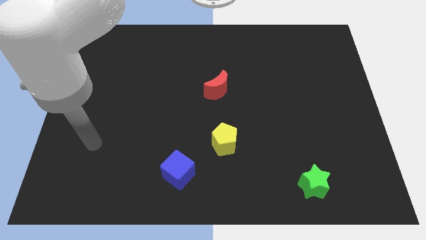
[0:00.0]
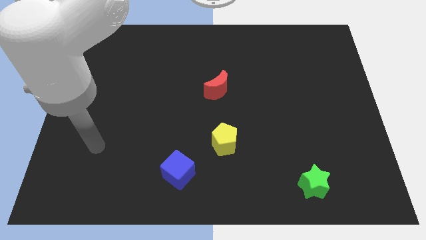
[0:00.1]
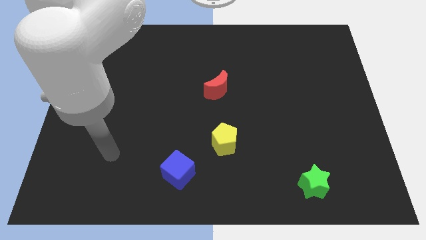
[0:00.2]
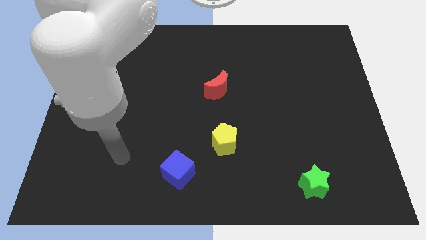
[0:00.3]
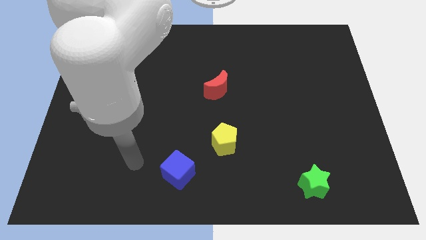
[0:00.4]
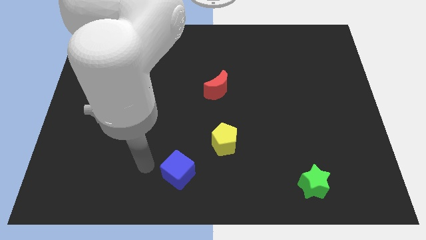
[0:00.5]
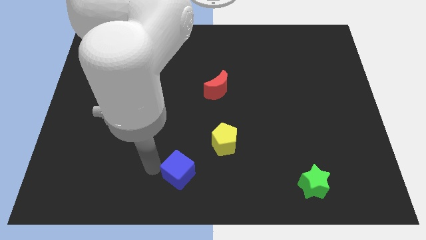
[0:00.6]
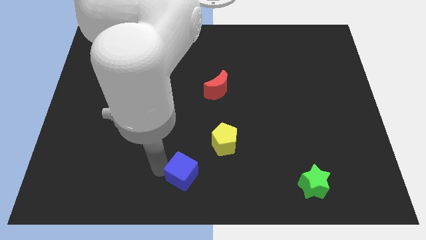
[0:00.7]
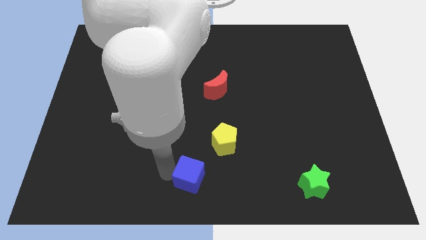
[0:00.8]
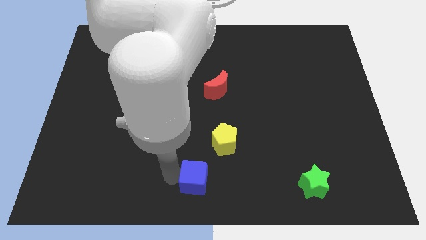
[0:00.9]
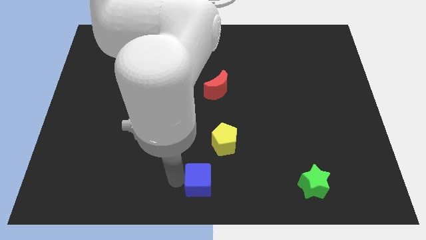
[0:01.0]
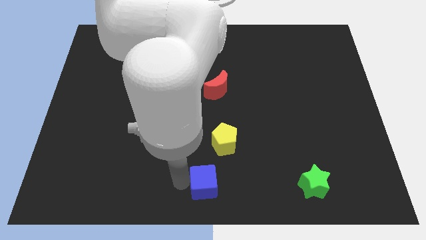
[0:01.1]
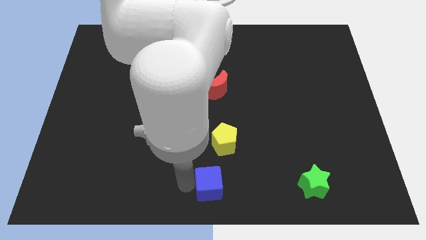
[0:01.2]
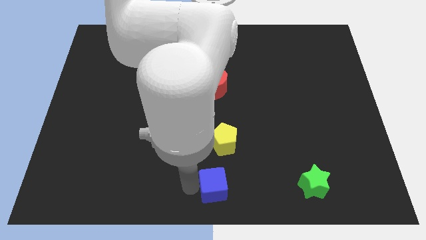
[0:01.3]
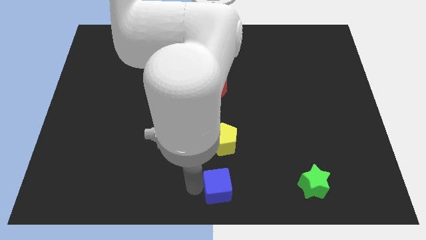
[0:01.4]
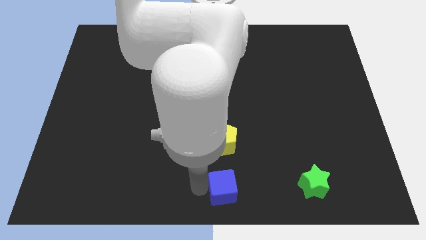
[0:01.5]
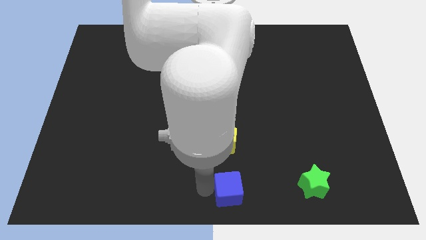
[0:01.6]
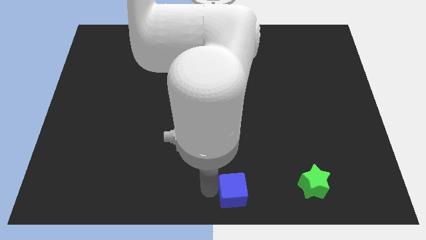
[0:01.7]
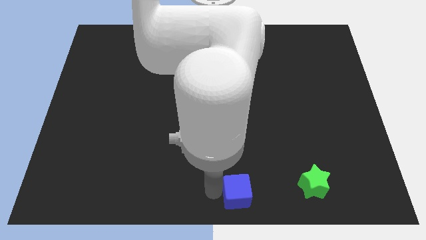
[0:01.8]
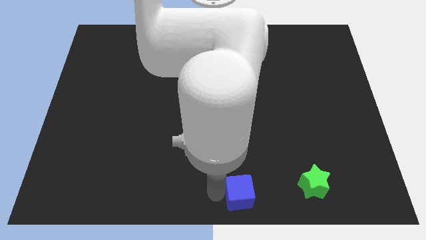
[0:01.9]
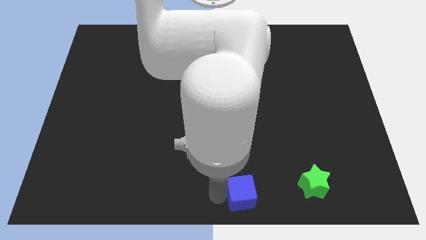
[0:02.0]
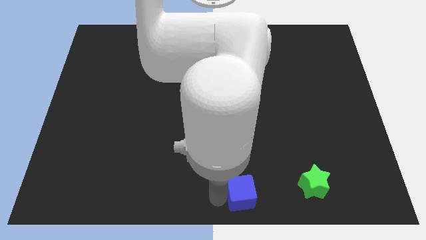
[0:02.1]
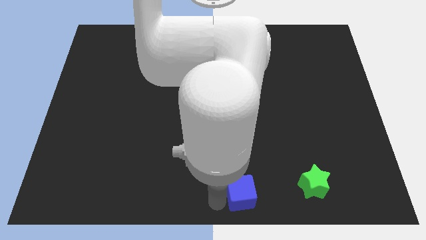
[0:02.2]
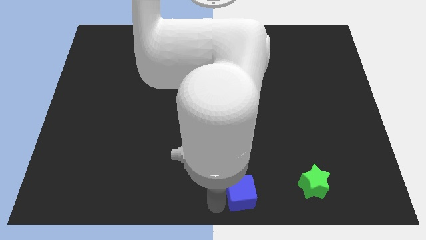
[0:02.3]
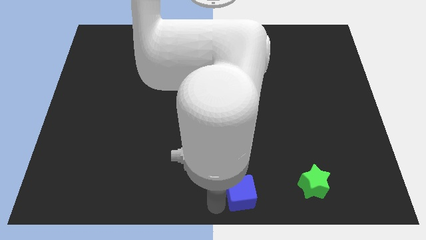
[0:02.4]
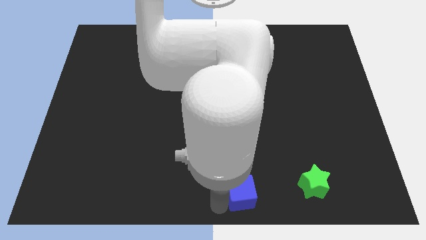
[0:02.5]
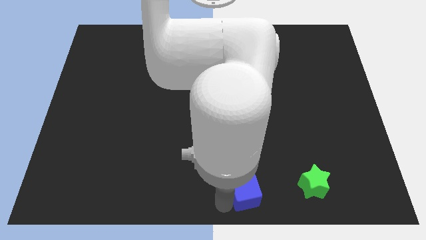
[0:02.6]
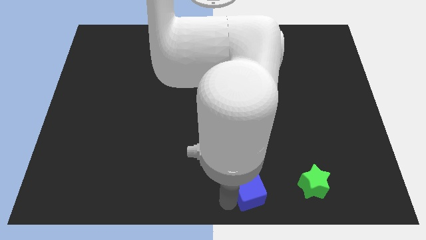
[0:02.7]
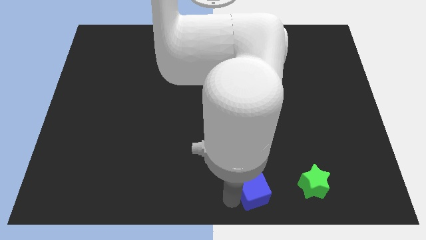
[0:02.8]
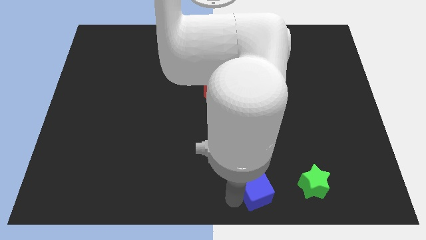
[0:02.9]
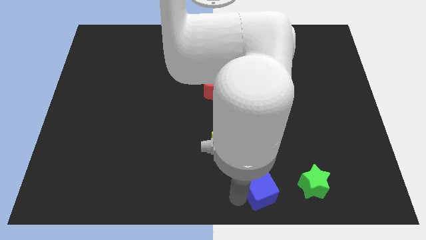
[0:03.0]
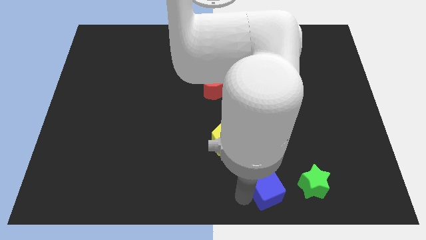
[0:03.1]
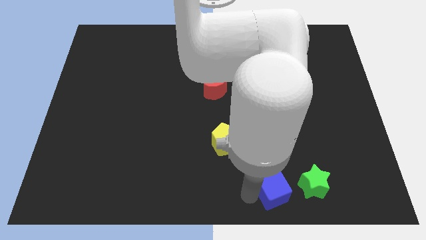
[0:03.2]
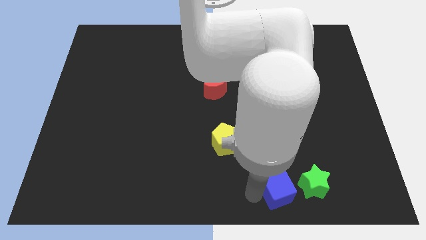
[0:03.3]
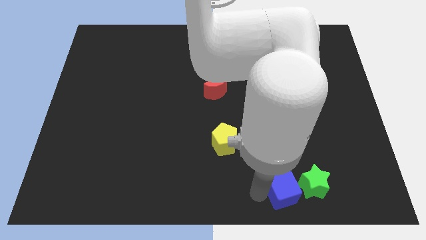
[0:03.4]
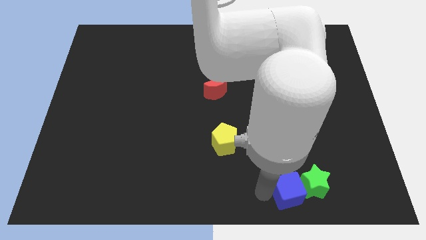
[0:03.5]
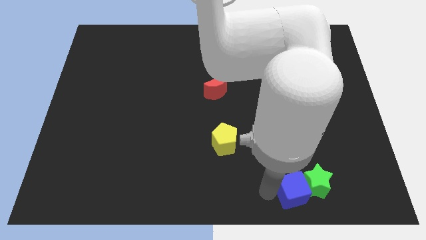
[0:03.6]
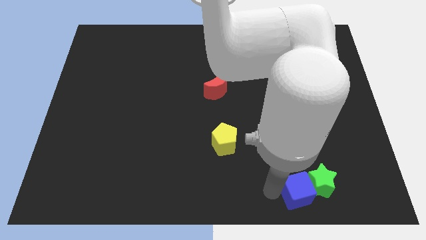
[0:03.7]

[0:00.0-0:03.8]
slide the blue block to the green star

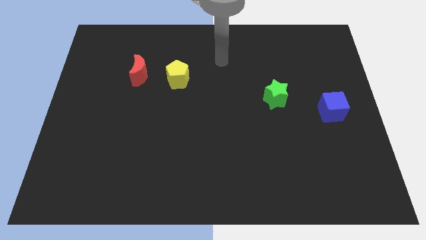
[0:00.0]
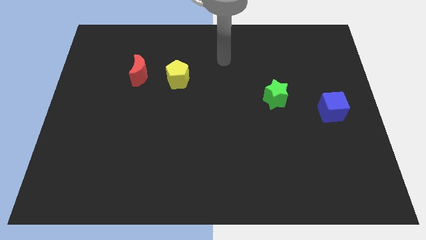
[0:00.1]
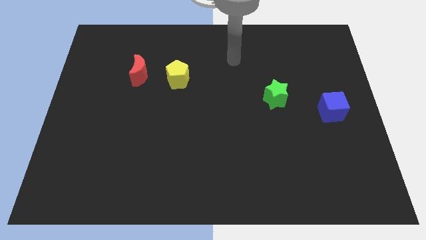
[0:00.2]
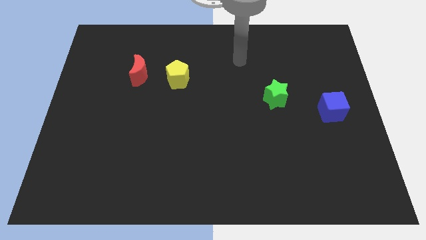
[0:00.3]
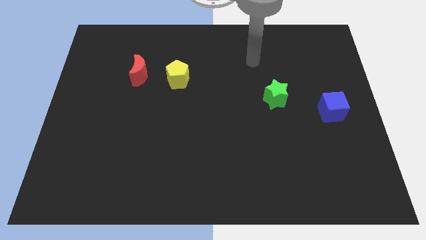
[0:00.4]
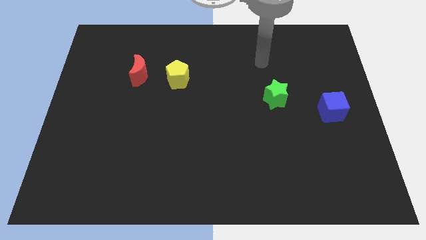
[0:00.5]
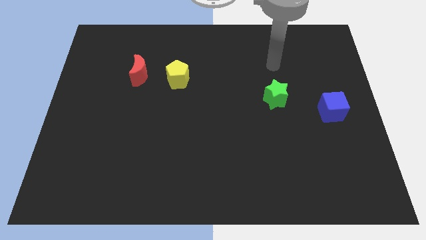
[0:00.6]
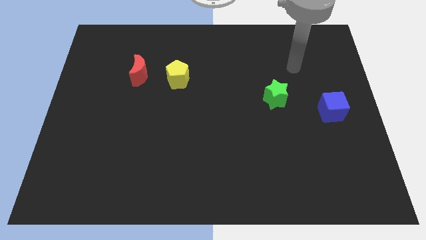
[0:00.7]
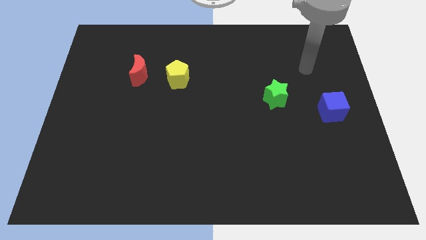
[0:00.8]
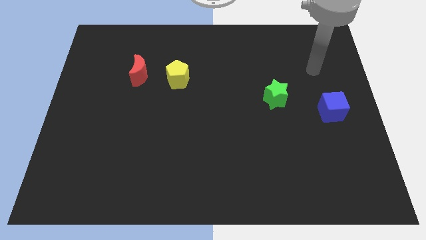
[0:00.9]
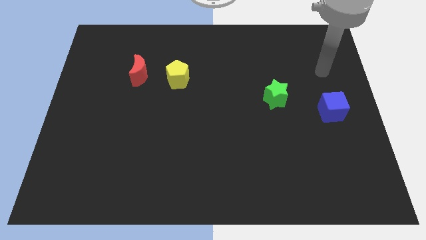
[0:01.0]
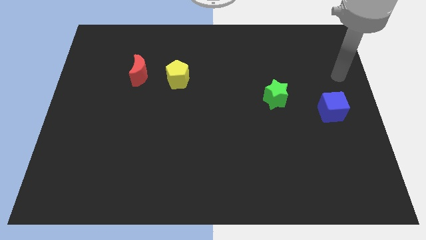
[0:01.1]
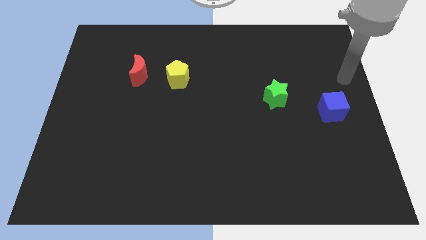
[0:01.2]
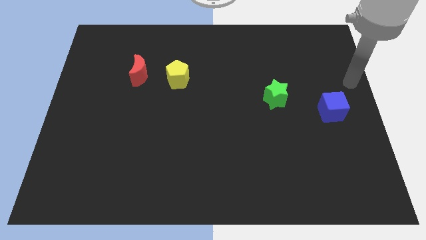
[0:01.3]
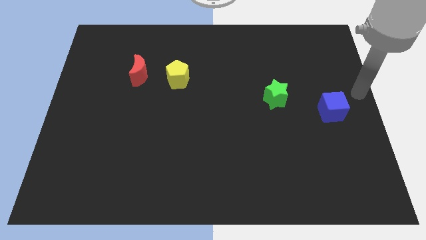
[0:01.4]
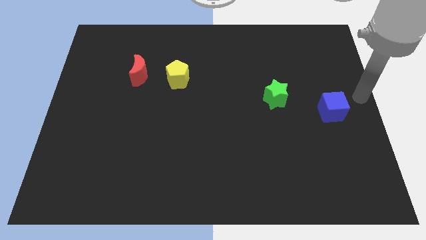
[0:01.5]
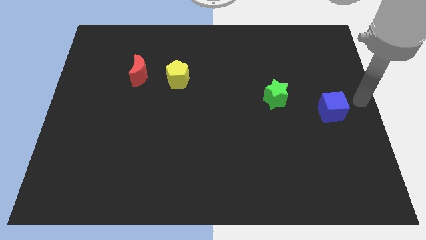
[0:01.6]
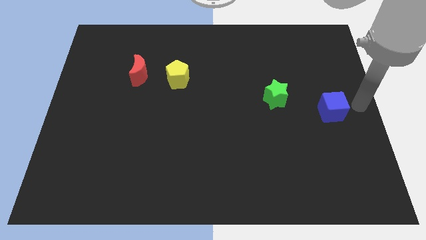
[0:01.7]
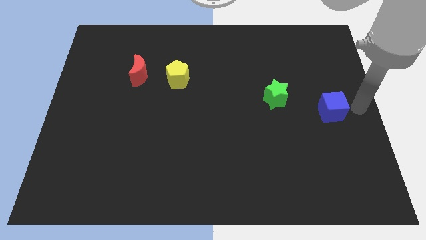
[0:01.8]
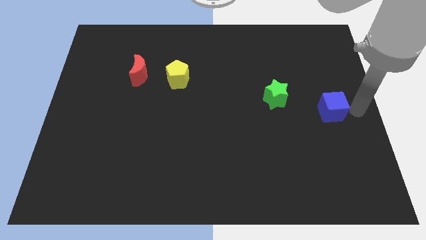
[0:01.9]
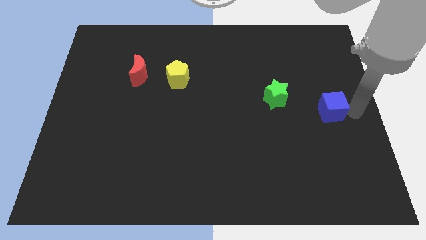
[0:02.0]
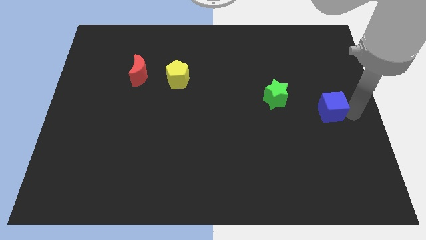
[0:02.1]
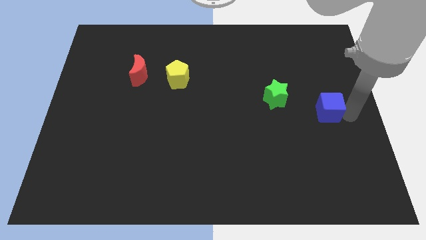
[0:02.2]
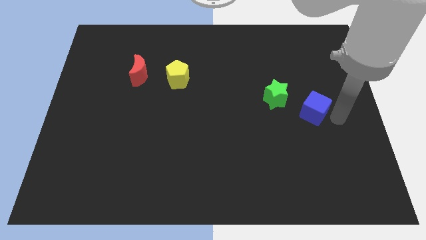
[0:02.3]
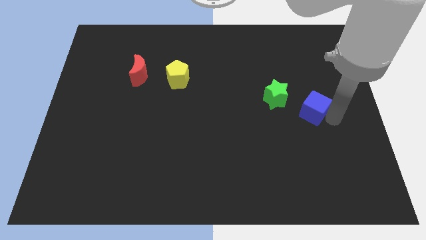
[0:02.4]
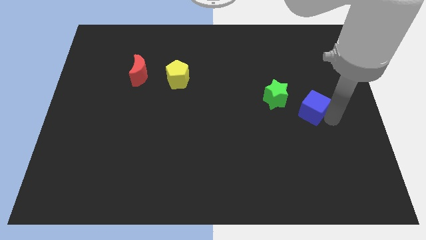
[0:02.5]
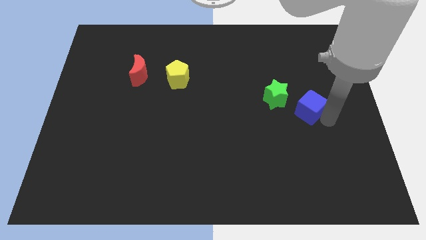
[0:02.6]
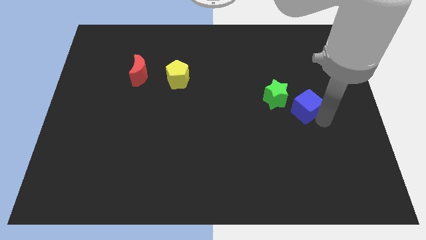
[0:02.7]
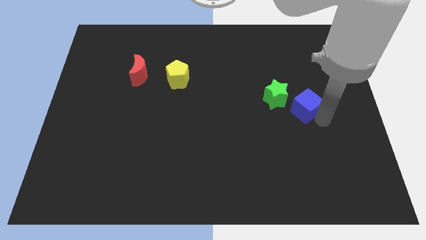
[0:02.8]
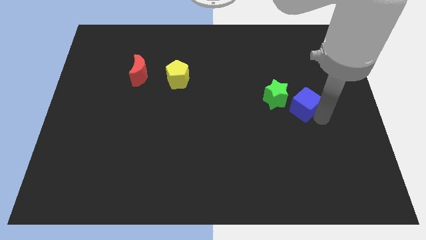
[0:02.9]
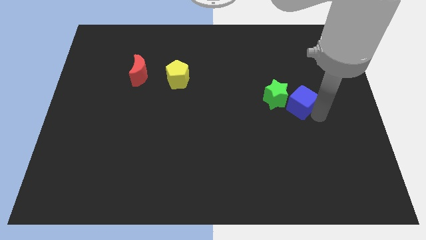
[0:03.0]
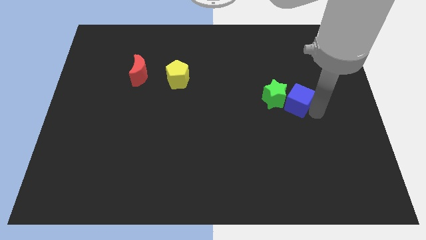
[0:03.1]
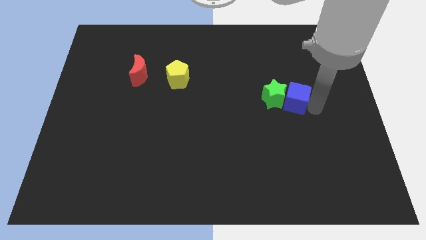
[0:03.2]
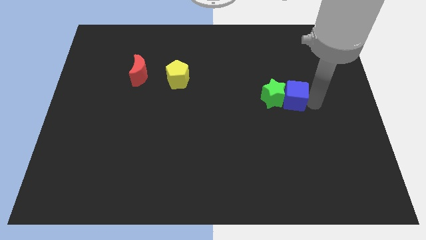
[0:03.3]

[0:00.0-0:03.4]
move the blue block next to the green star

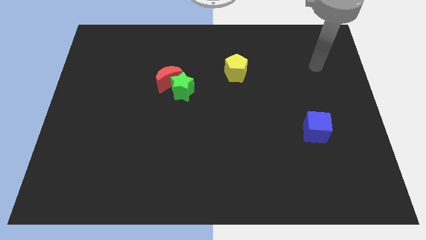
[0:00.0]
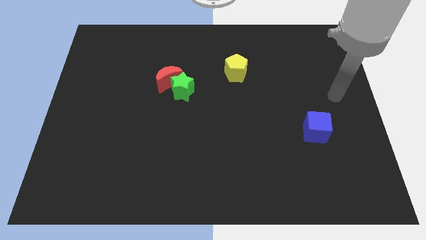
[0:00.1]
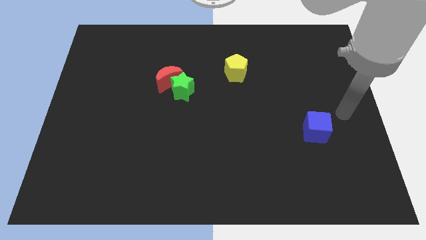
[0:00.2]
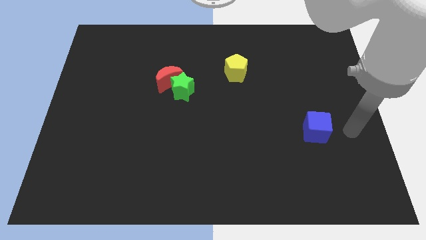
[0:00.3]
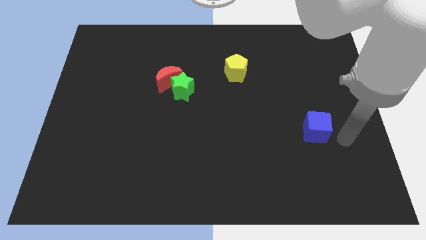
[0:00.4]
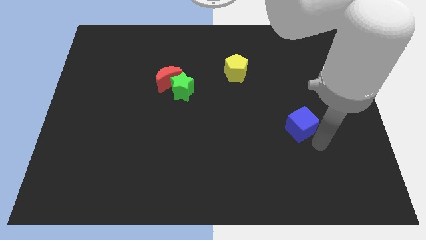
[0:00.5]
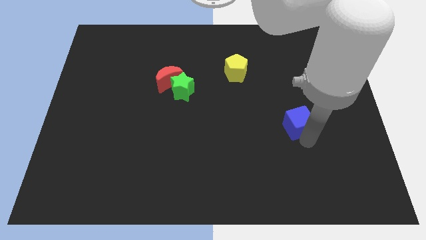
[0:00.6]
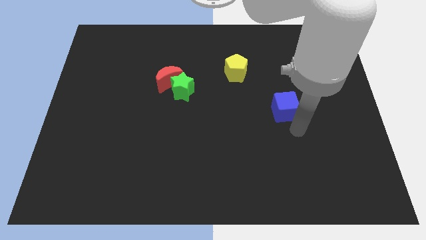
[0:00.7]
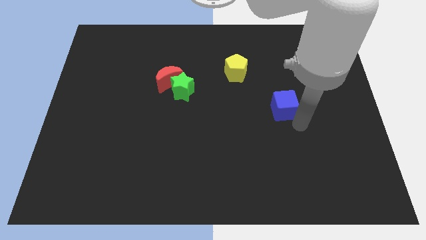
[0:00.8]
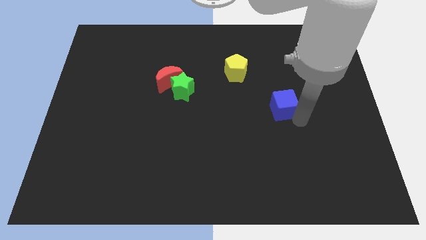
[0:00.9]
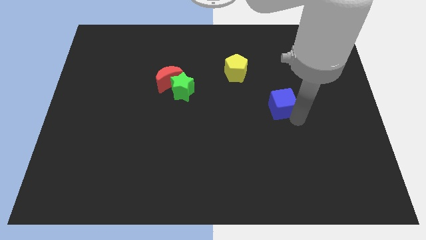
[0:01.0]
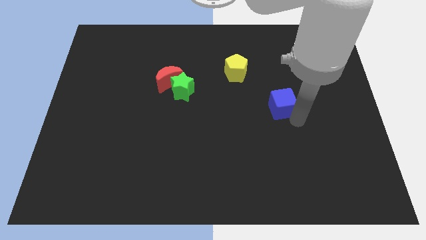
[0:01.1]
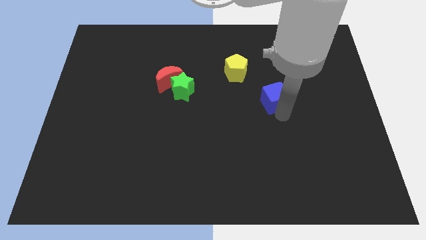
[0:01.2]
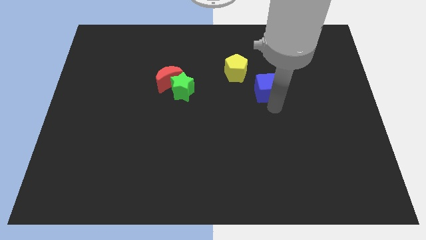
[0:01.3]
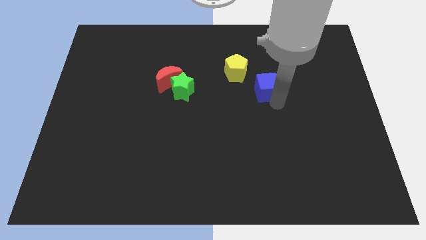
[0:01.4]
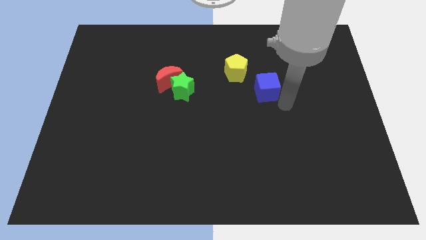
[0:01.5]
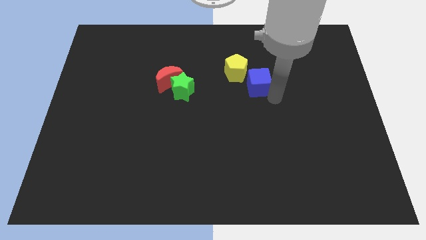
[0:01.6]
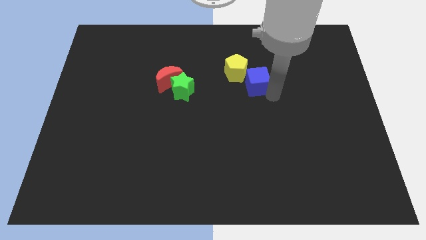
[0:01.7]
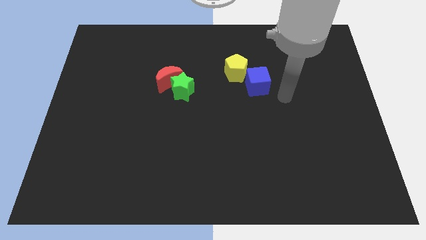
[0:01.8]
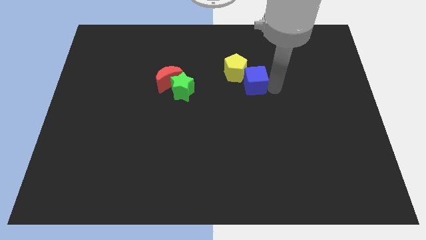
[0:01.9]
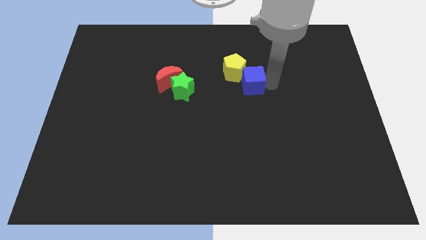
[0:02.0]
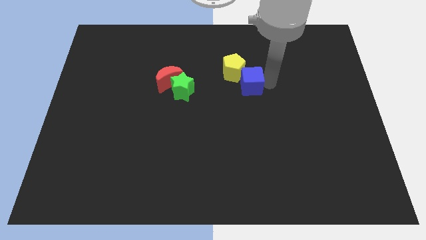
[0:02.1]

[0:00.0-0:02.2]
put the blue block towards the yellow pentagon
